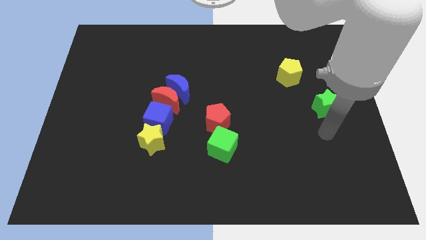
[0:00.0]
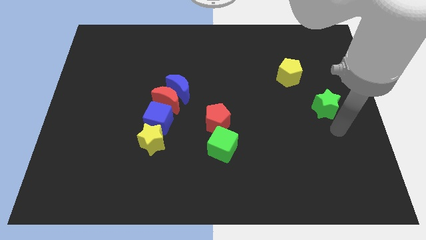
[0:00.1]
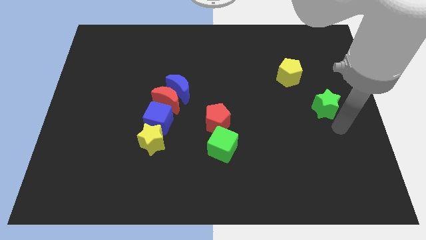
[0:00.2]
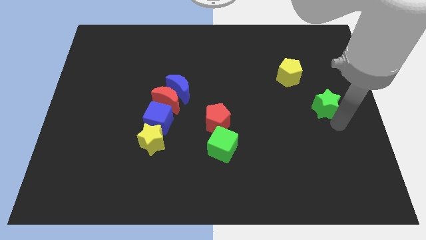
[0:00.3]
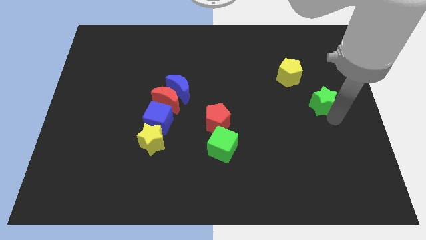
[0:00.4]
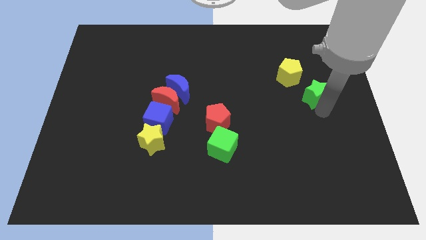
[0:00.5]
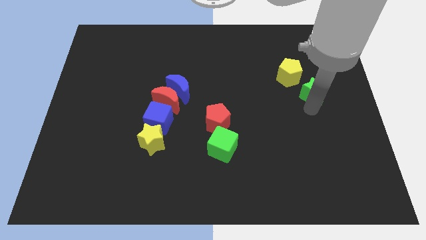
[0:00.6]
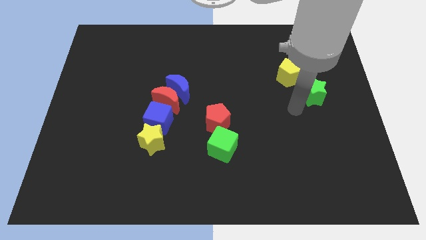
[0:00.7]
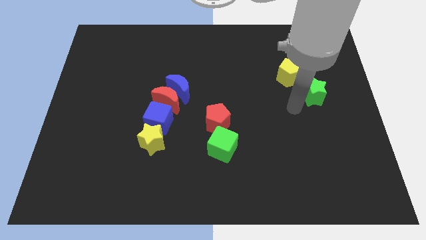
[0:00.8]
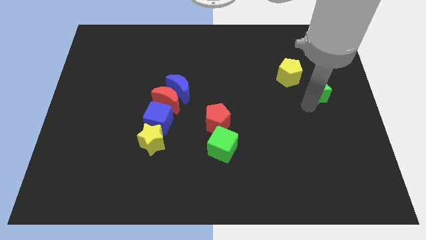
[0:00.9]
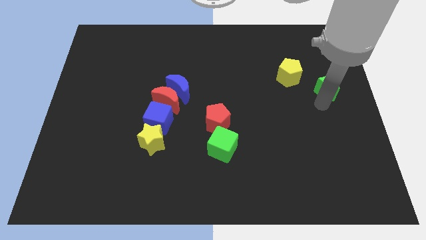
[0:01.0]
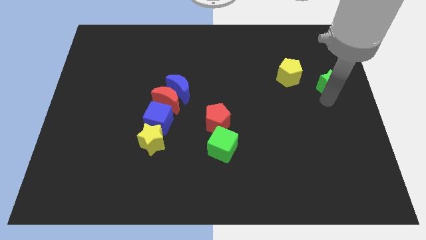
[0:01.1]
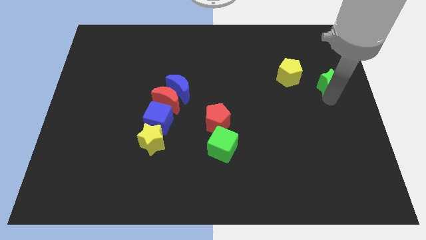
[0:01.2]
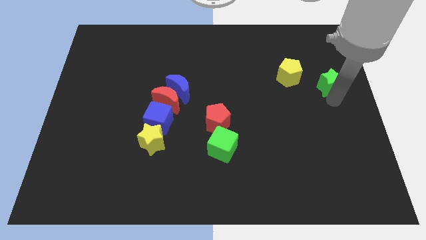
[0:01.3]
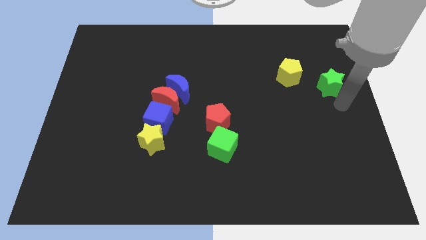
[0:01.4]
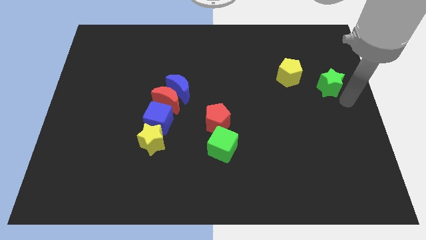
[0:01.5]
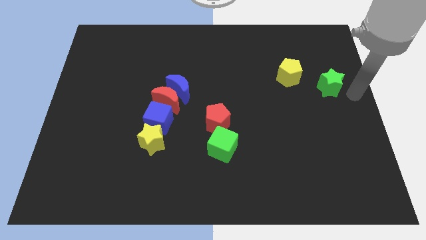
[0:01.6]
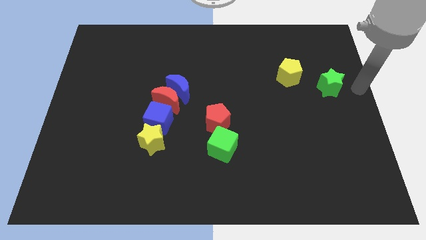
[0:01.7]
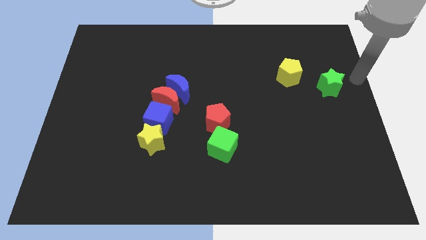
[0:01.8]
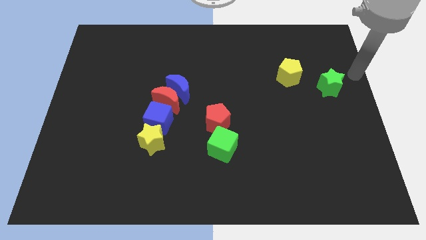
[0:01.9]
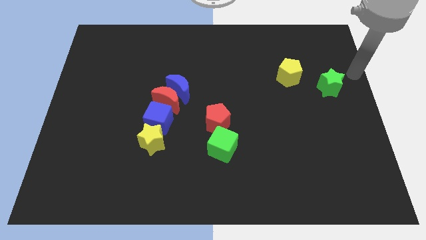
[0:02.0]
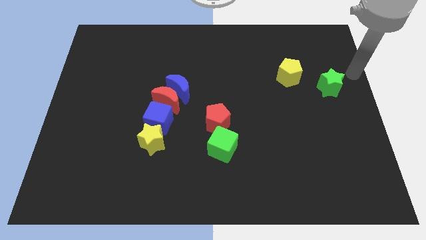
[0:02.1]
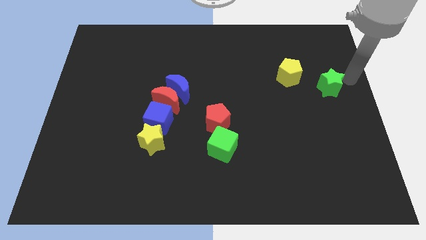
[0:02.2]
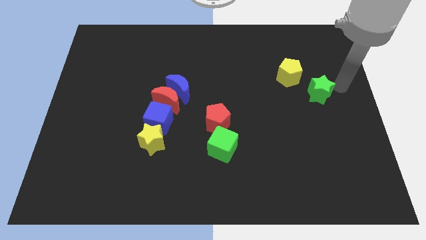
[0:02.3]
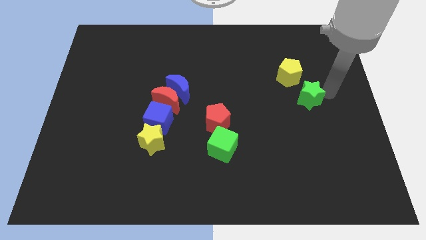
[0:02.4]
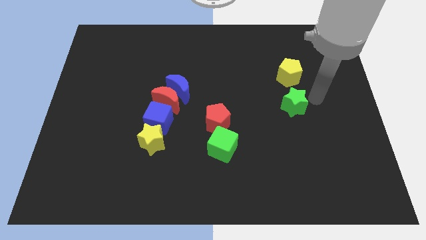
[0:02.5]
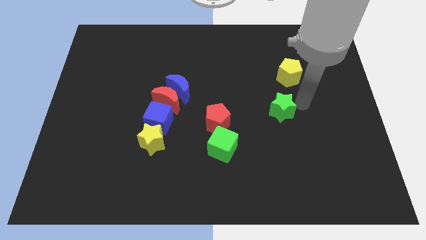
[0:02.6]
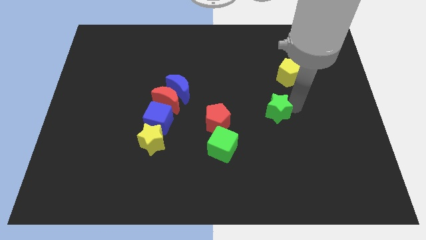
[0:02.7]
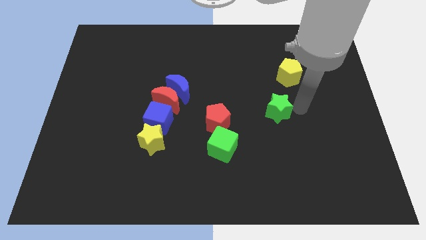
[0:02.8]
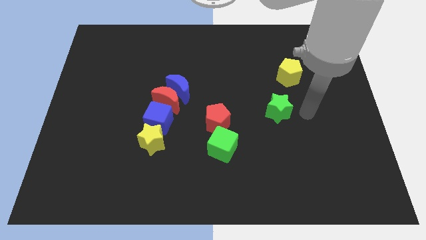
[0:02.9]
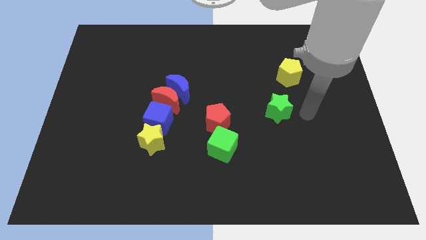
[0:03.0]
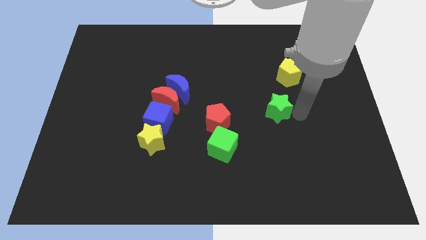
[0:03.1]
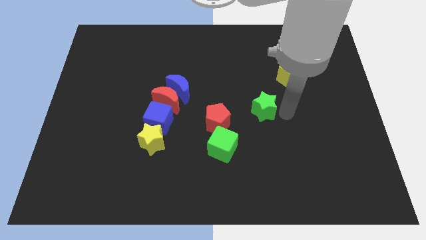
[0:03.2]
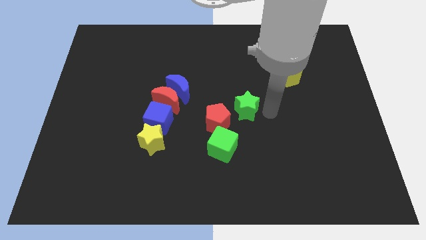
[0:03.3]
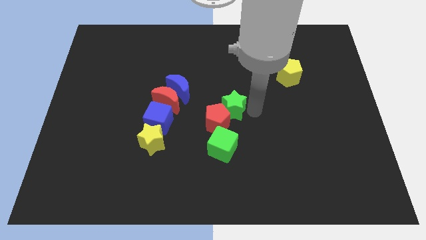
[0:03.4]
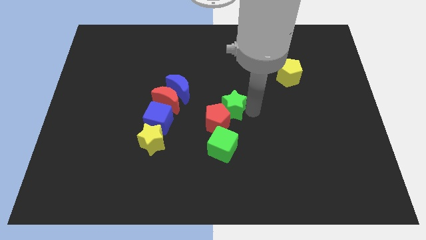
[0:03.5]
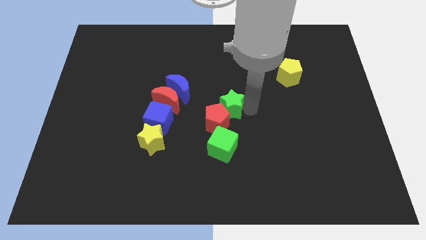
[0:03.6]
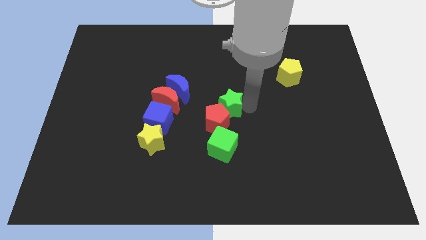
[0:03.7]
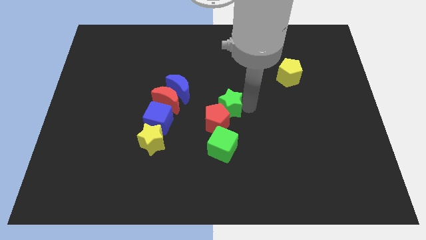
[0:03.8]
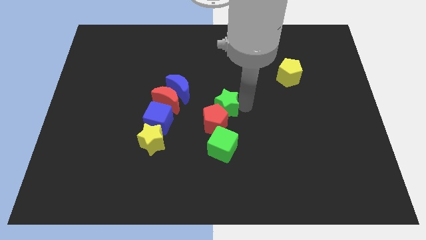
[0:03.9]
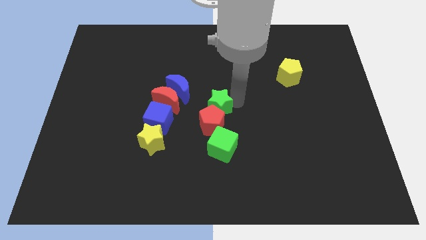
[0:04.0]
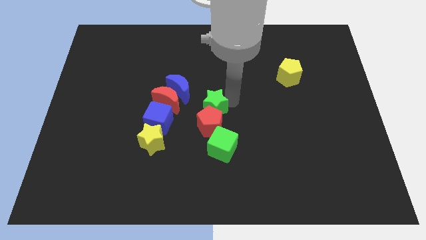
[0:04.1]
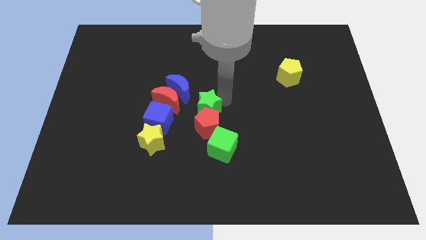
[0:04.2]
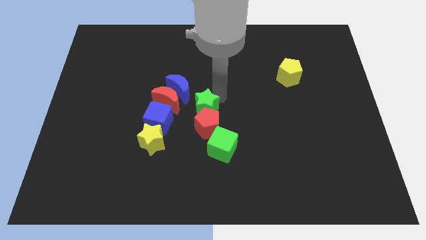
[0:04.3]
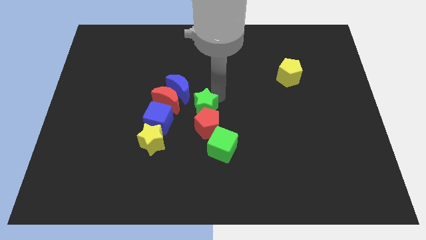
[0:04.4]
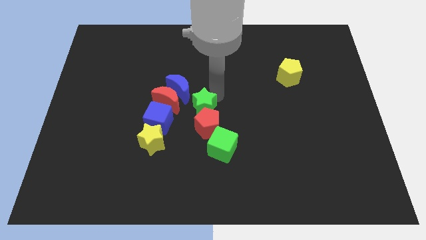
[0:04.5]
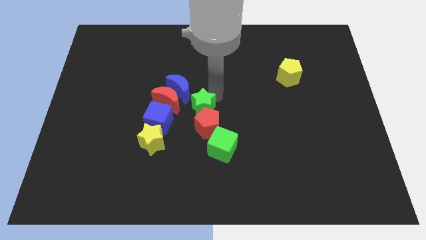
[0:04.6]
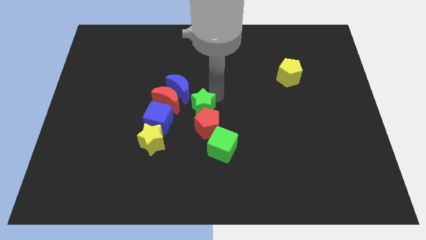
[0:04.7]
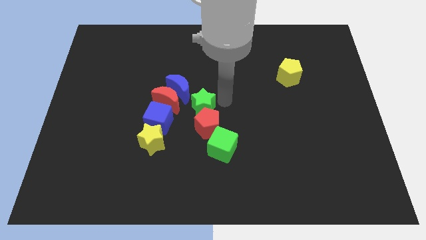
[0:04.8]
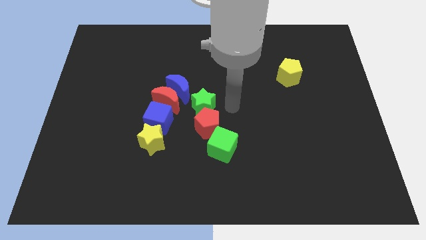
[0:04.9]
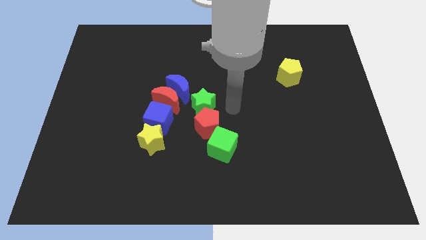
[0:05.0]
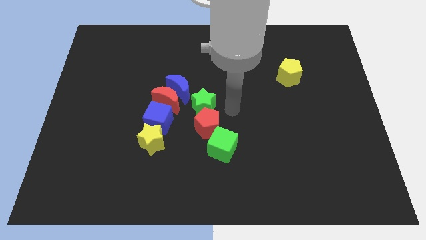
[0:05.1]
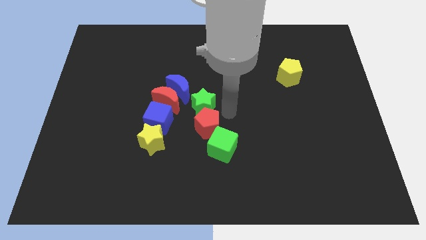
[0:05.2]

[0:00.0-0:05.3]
place the green star into the red pentagon

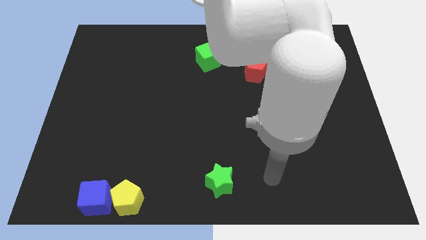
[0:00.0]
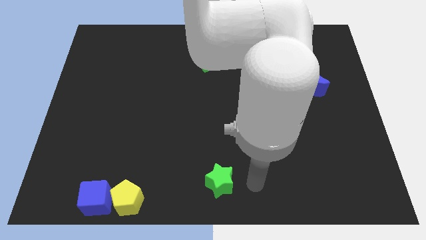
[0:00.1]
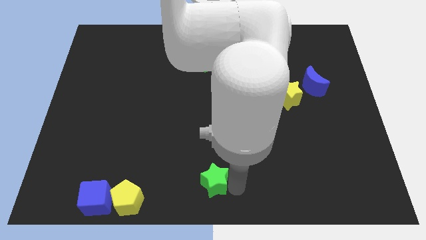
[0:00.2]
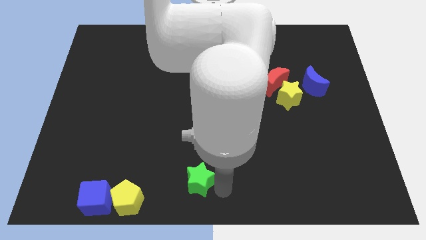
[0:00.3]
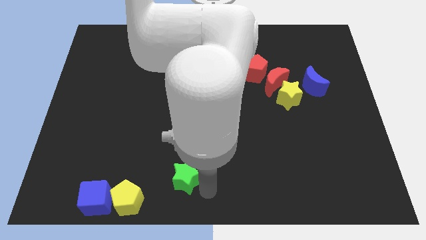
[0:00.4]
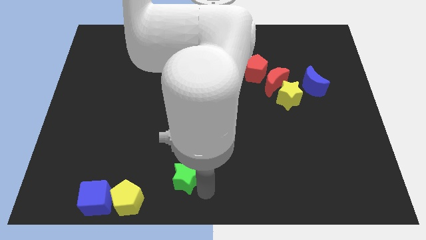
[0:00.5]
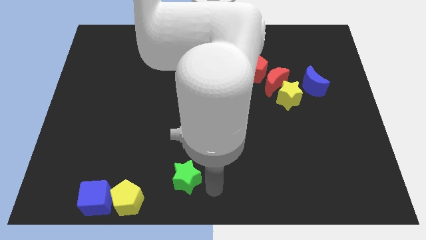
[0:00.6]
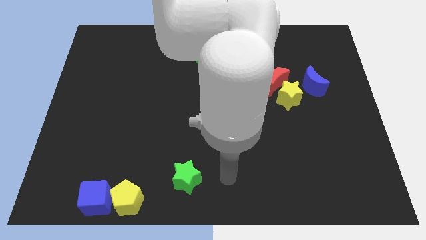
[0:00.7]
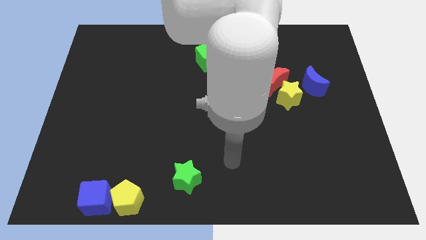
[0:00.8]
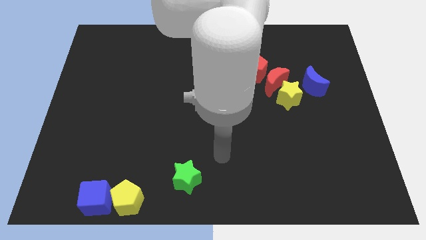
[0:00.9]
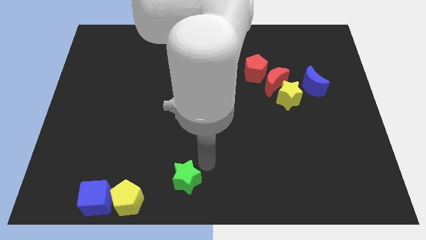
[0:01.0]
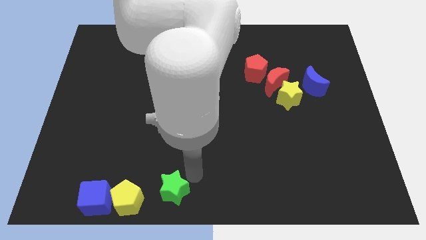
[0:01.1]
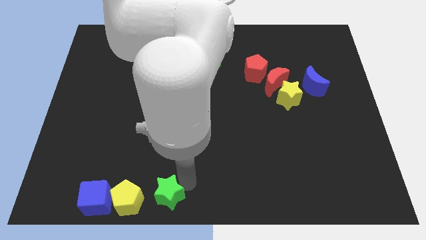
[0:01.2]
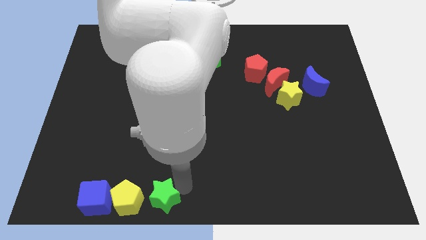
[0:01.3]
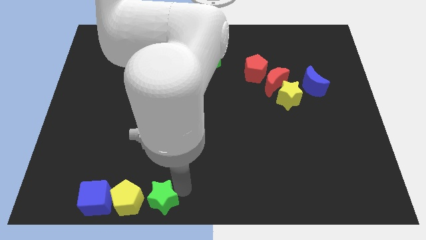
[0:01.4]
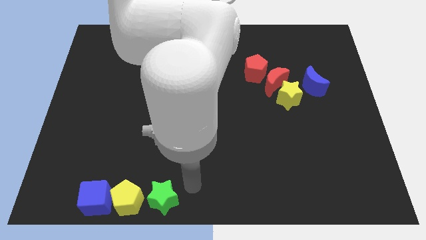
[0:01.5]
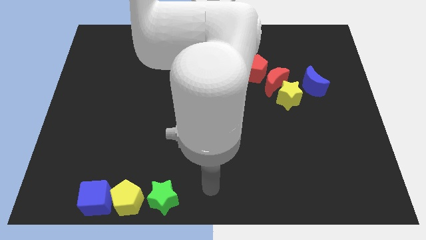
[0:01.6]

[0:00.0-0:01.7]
push the green star to the right of the yellow pentagon

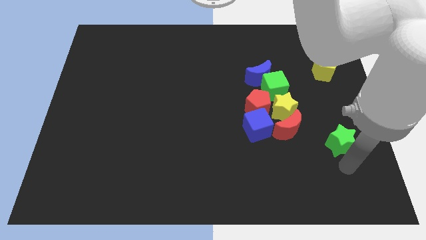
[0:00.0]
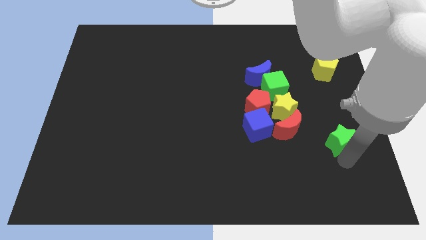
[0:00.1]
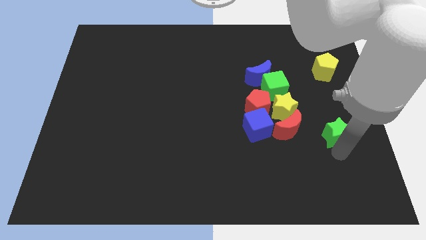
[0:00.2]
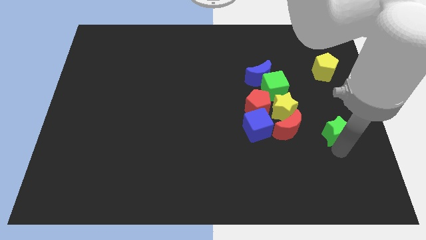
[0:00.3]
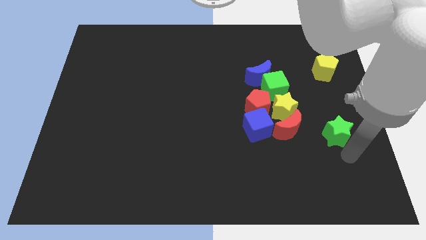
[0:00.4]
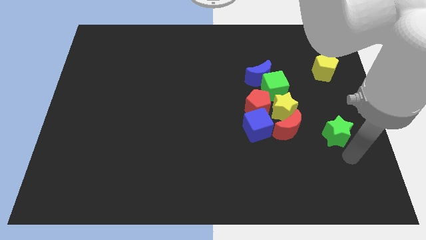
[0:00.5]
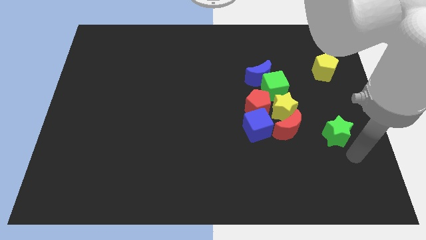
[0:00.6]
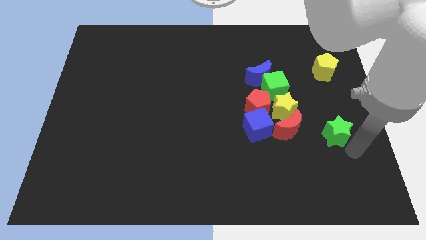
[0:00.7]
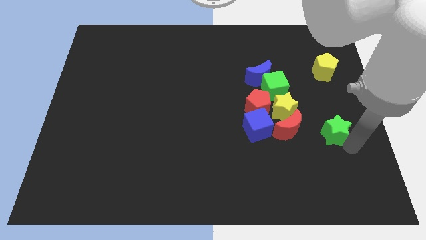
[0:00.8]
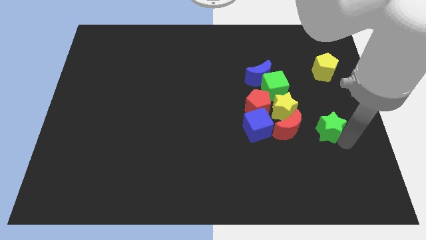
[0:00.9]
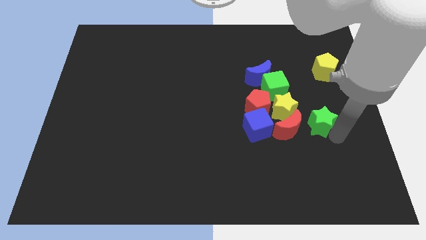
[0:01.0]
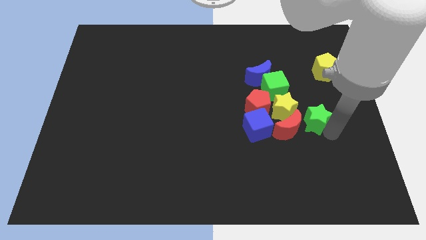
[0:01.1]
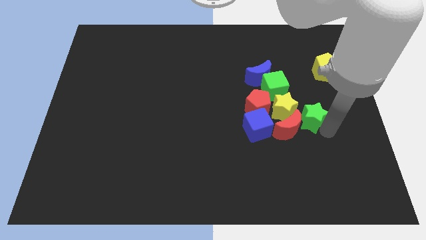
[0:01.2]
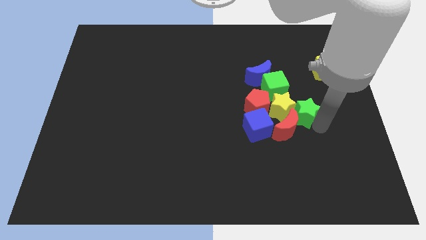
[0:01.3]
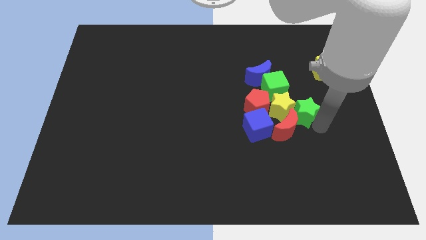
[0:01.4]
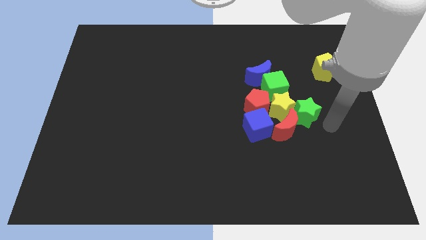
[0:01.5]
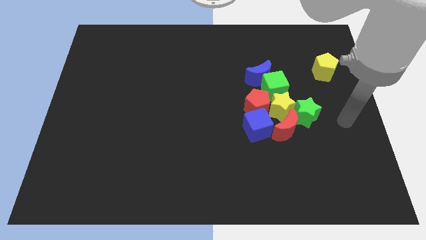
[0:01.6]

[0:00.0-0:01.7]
push the green star into the group of blocks

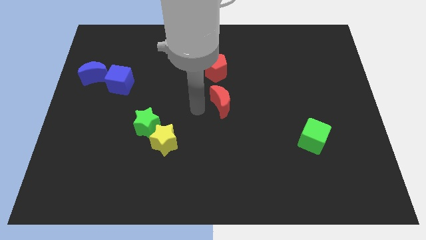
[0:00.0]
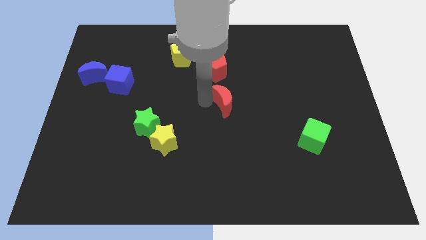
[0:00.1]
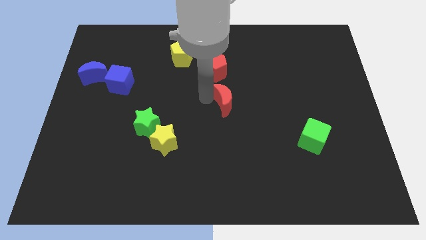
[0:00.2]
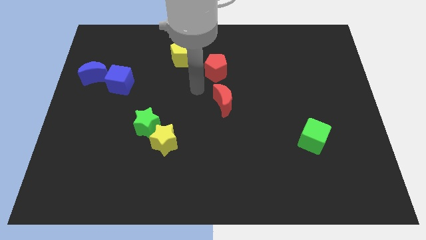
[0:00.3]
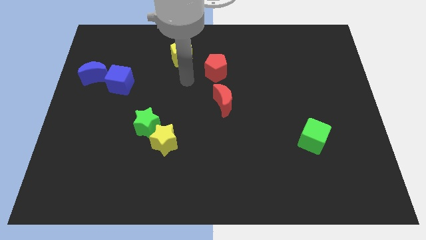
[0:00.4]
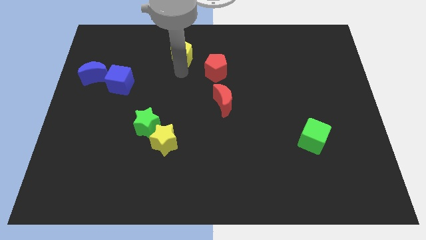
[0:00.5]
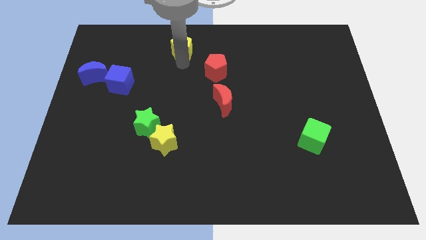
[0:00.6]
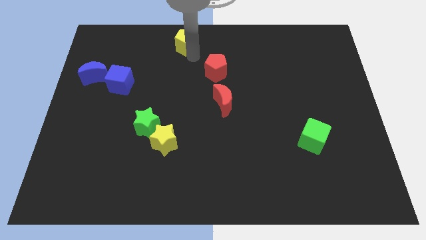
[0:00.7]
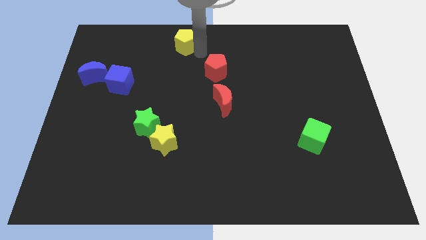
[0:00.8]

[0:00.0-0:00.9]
place the arm in between the pentagons
